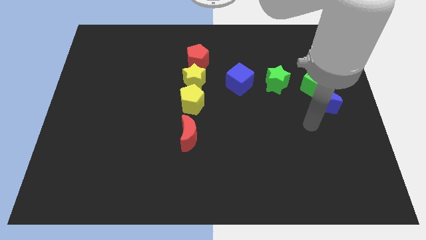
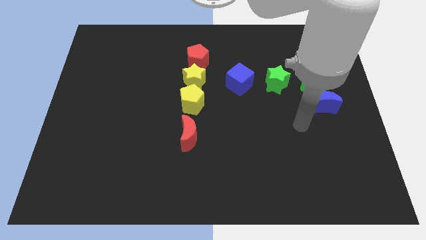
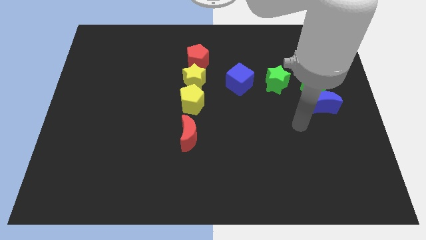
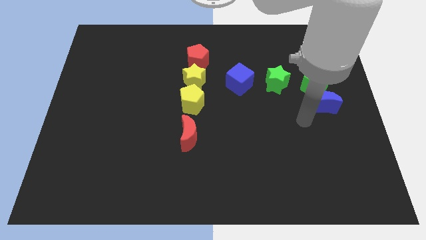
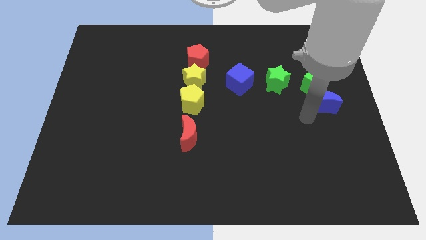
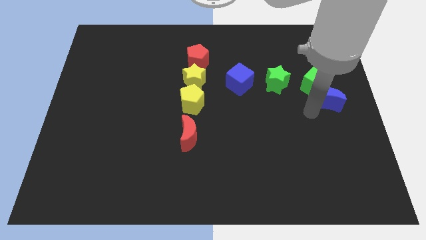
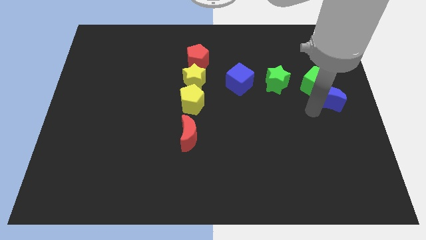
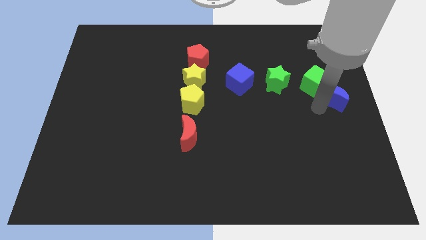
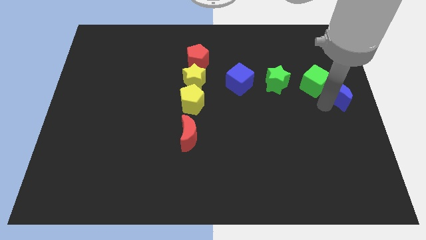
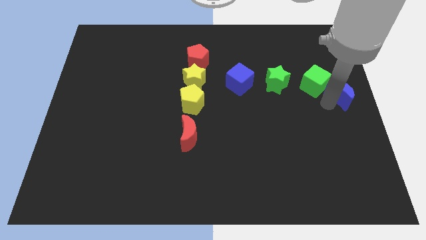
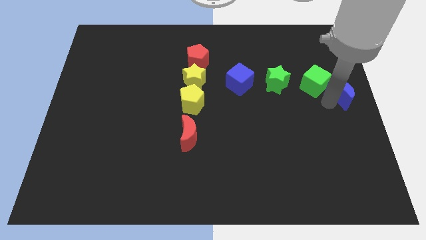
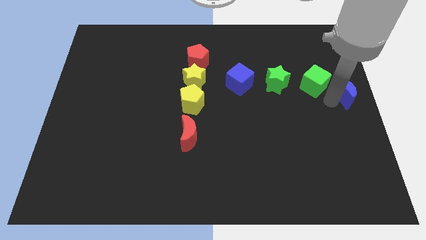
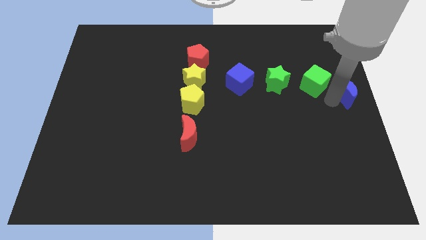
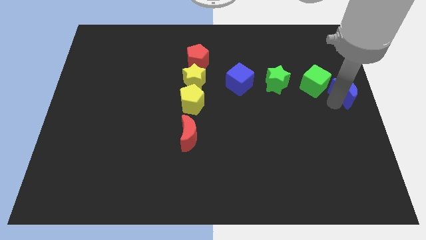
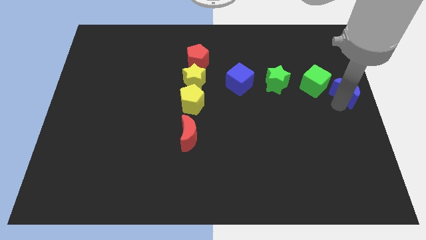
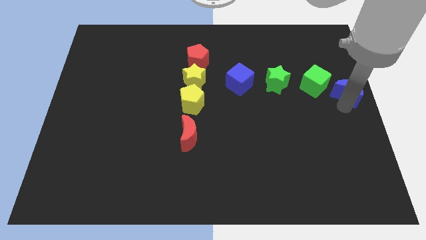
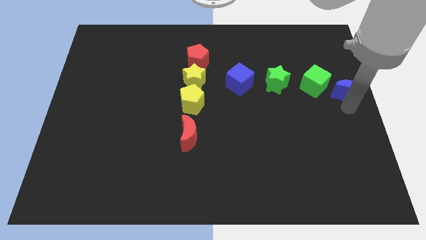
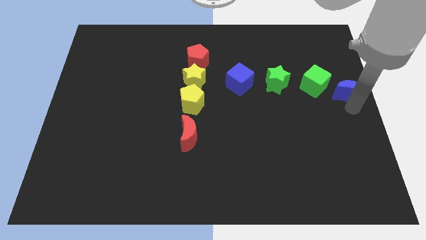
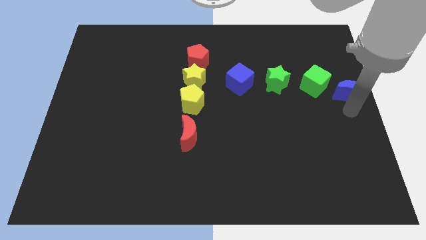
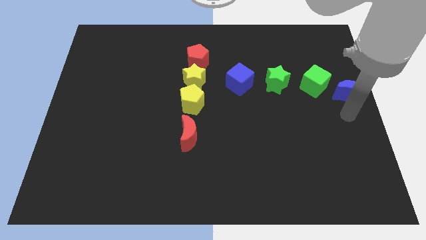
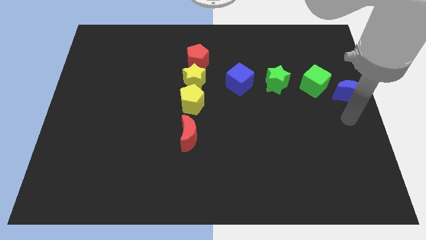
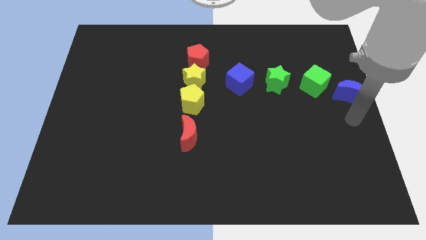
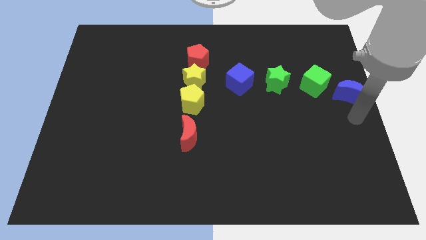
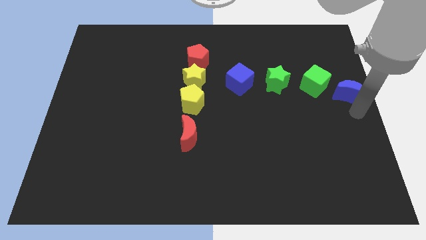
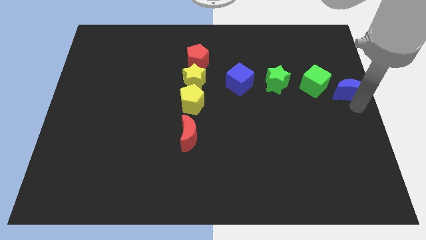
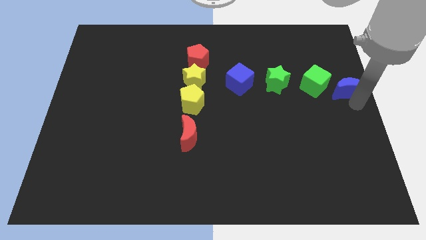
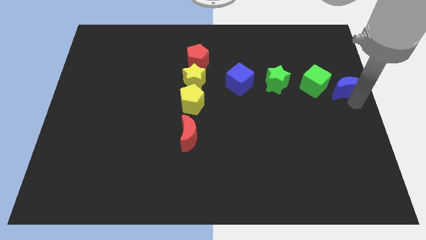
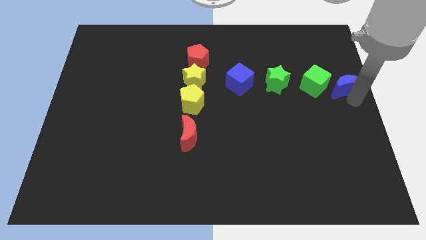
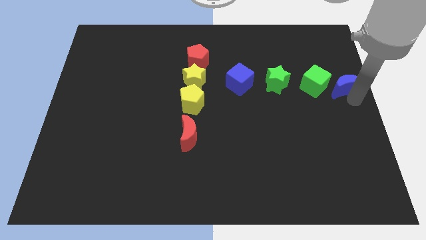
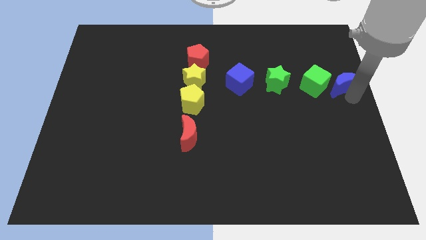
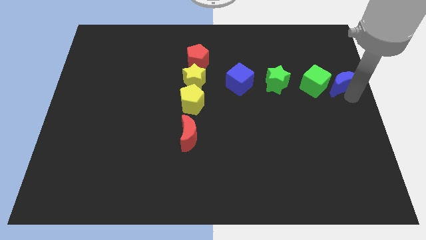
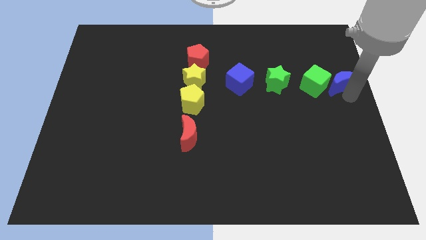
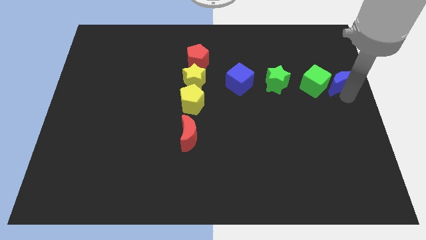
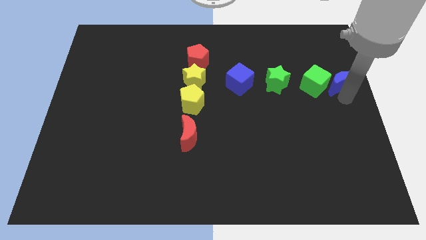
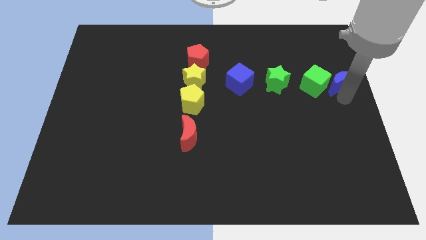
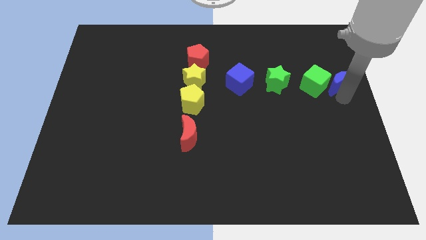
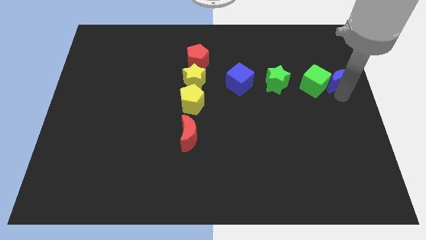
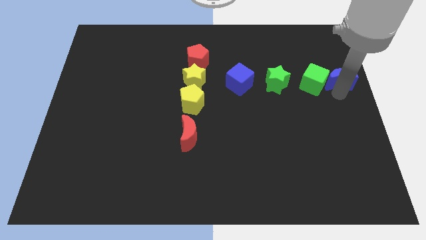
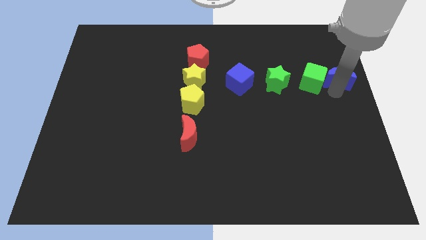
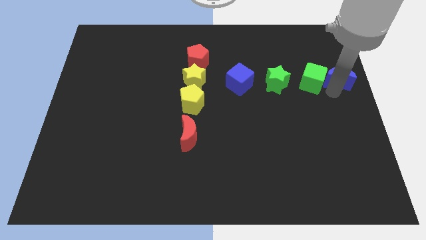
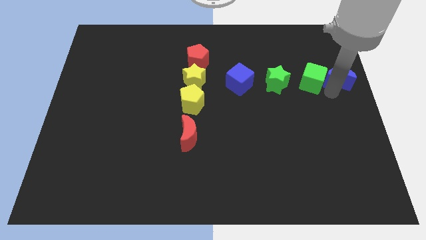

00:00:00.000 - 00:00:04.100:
move the blue moon to the center right

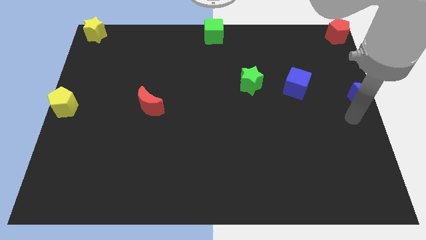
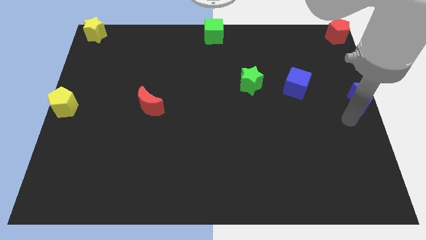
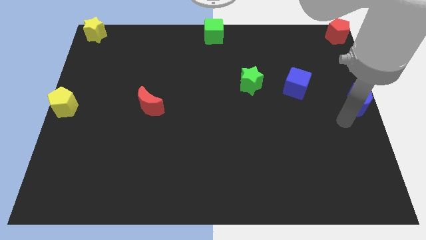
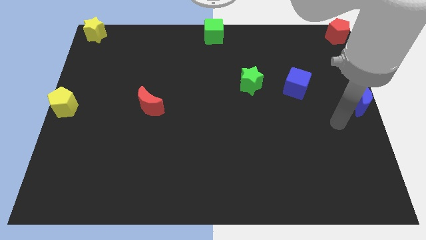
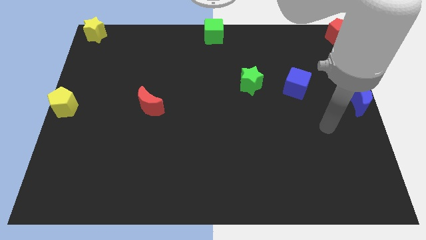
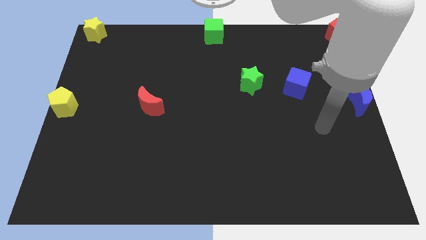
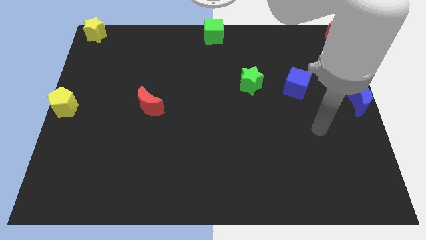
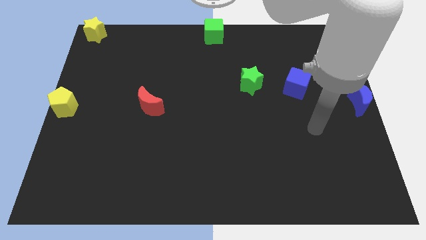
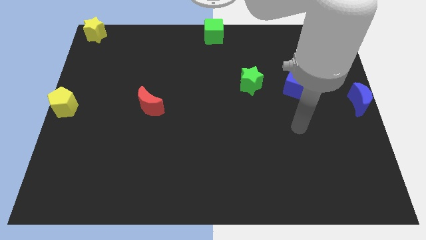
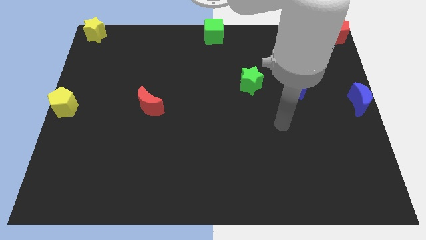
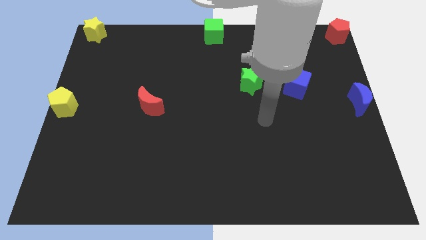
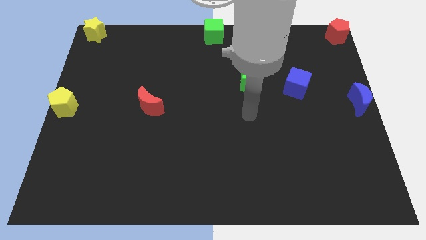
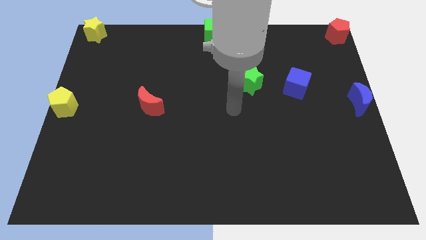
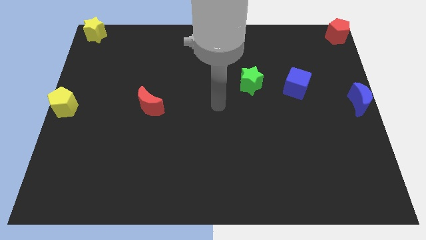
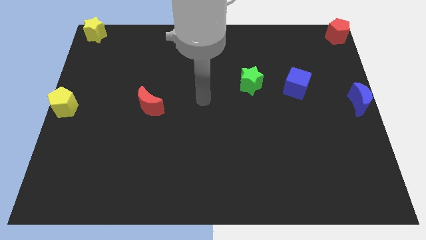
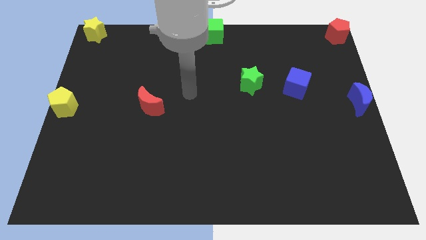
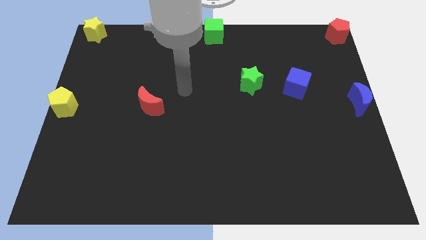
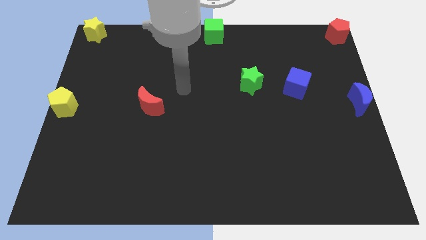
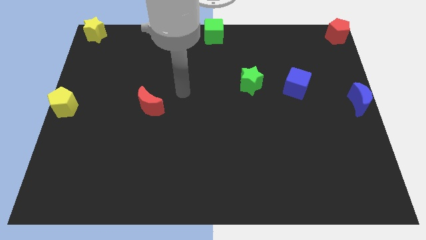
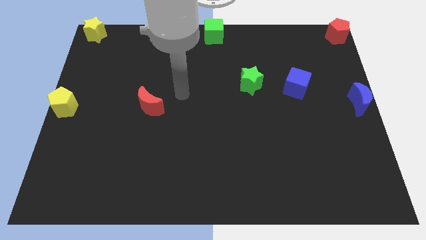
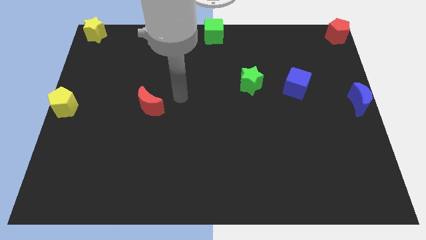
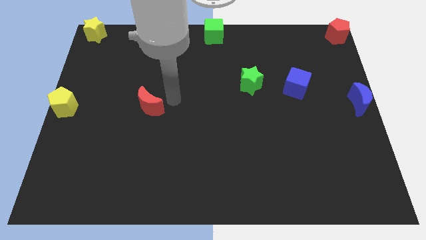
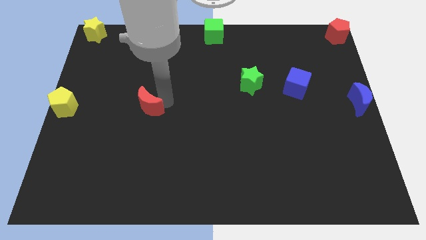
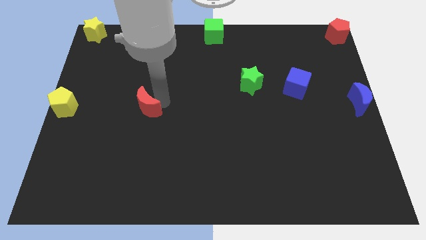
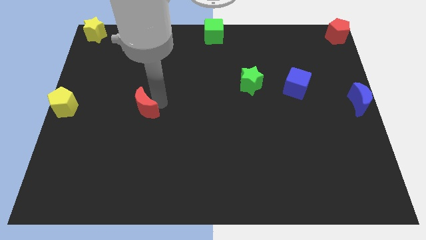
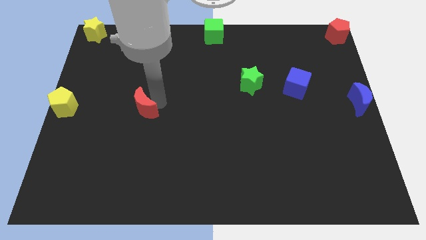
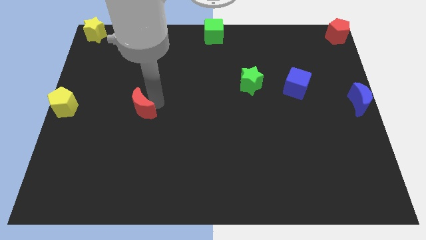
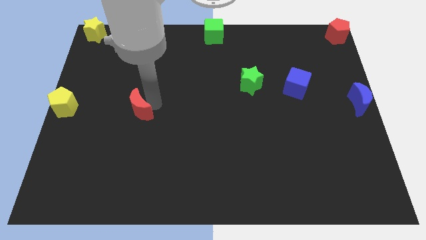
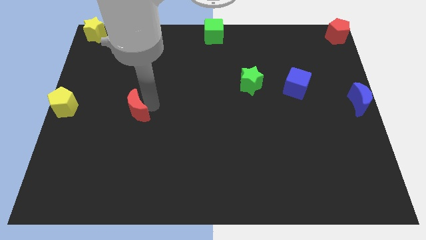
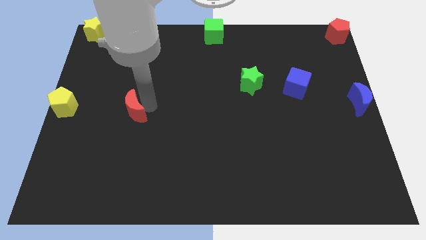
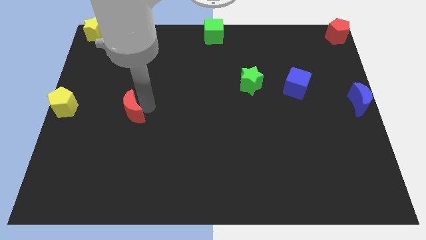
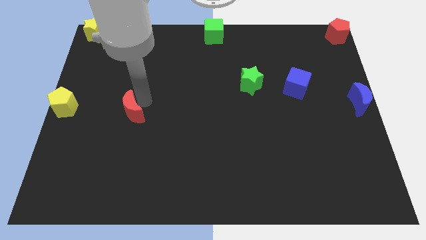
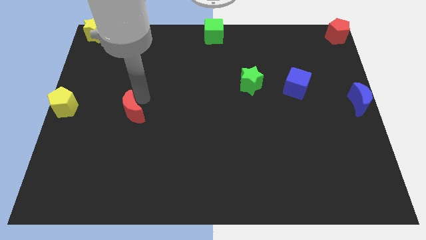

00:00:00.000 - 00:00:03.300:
move slightly red moon to the right side o the board

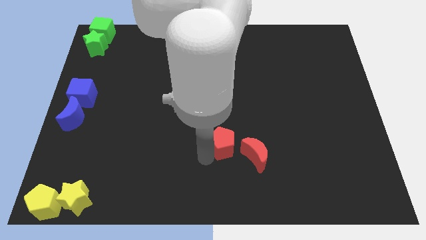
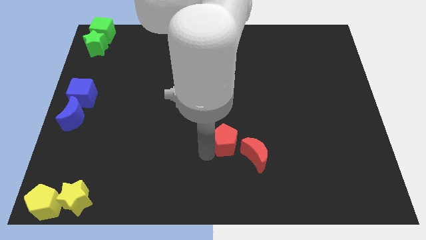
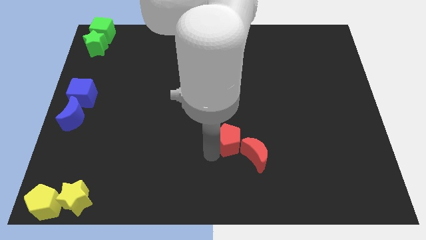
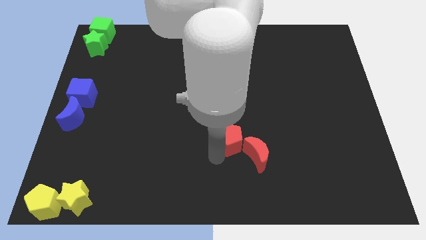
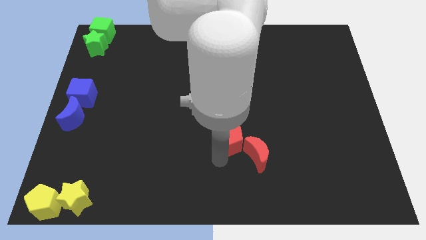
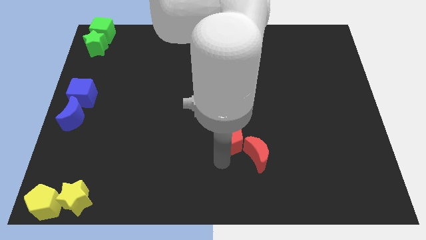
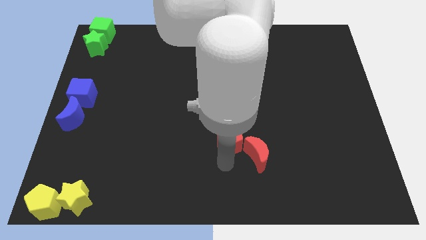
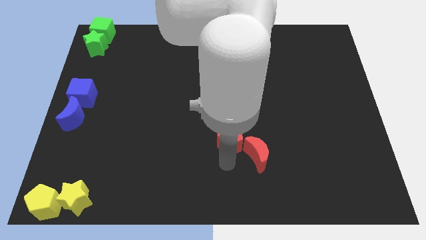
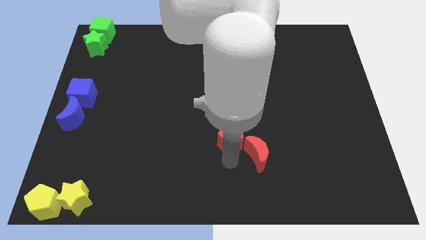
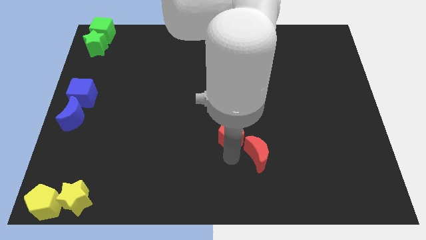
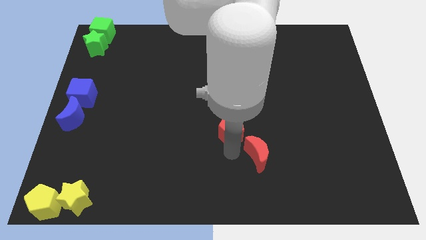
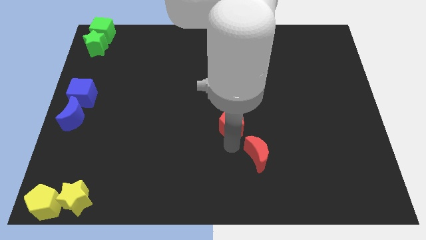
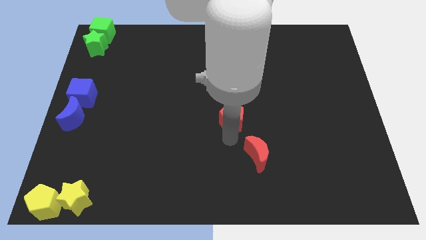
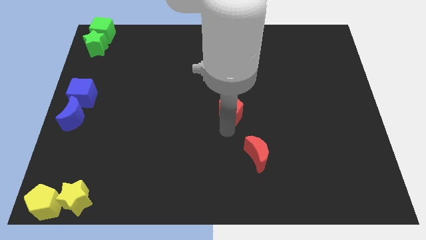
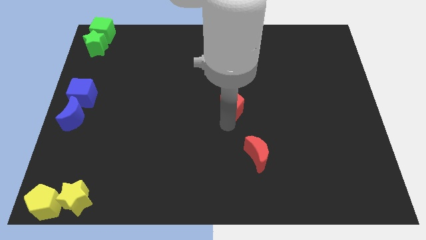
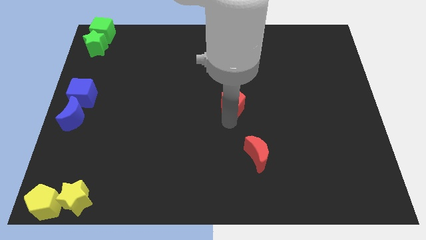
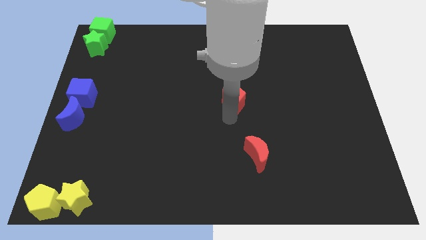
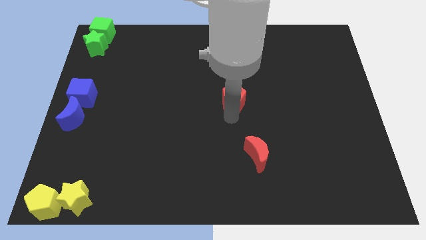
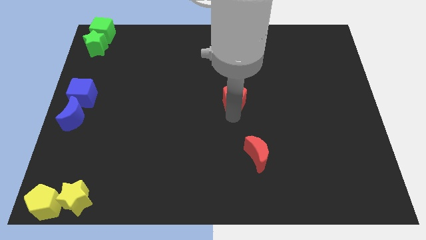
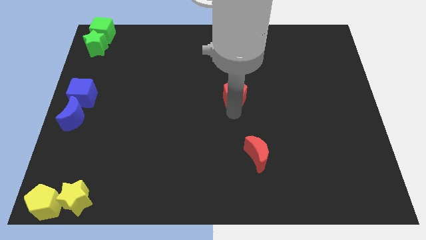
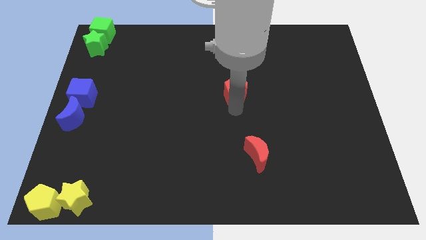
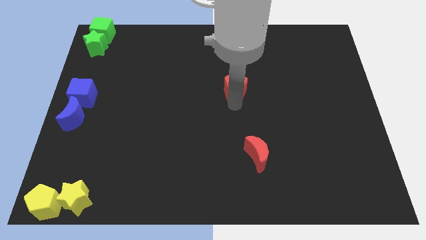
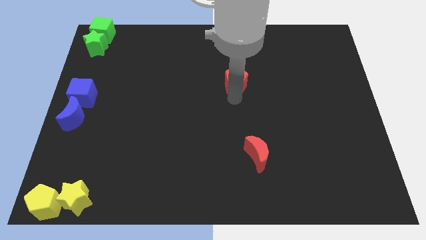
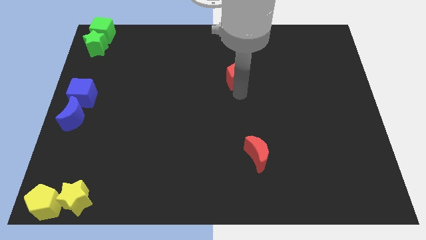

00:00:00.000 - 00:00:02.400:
move the red pentagon to the center
